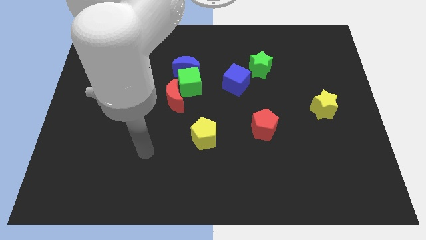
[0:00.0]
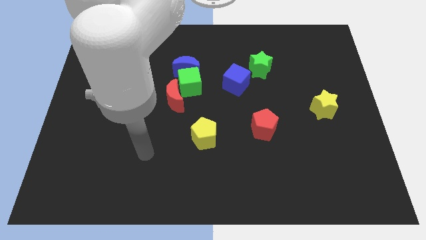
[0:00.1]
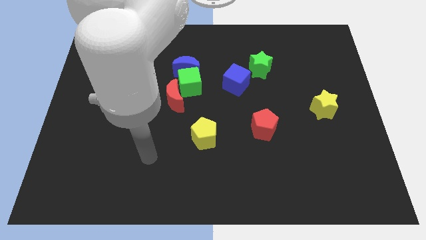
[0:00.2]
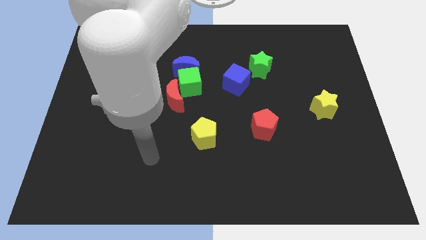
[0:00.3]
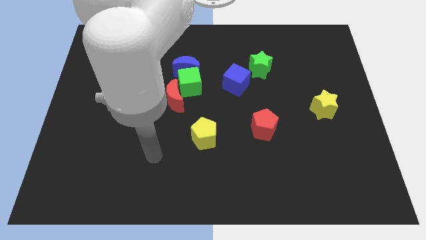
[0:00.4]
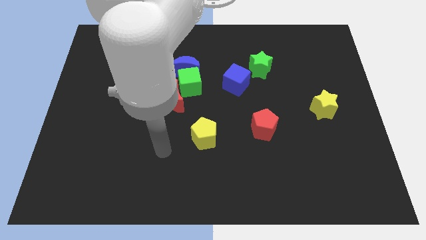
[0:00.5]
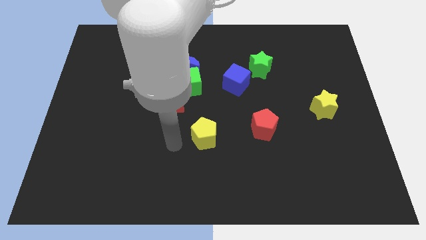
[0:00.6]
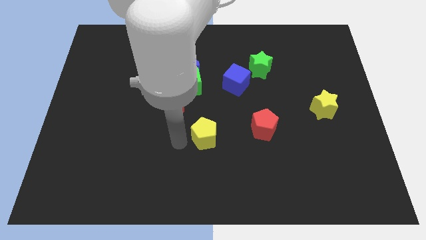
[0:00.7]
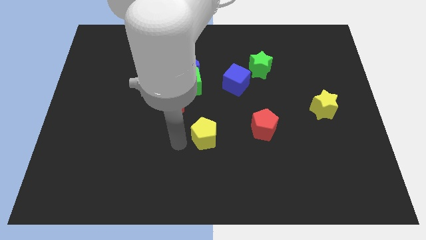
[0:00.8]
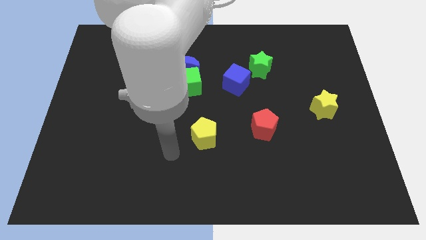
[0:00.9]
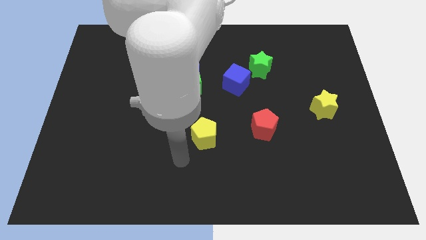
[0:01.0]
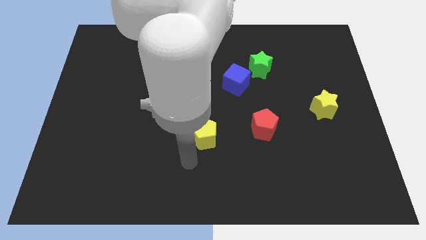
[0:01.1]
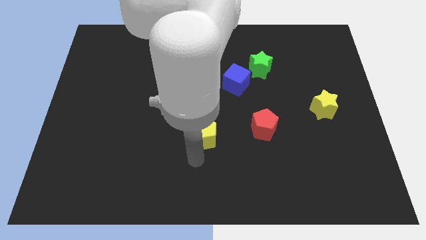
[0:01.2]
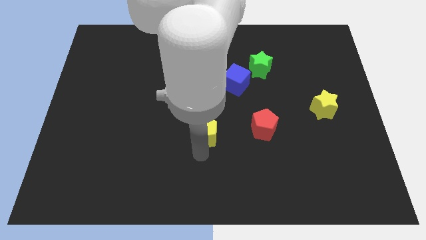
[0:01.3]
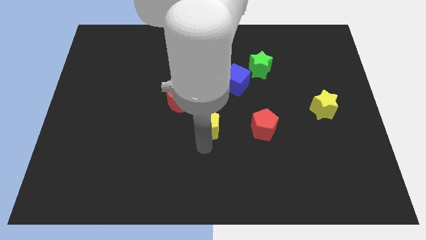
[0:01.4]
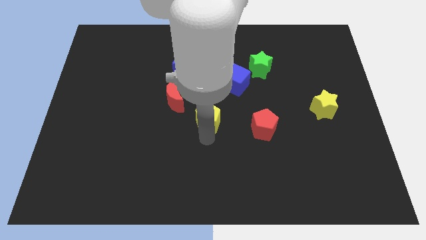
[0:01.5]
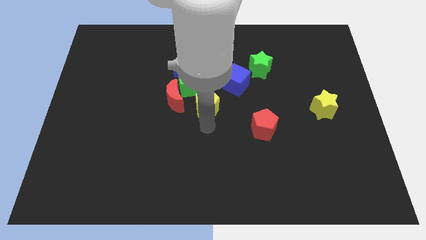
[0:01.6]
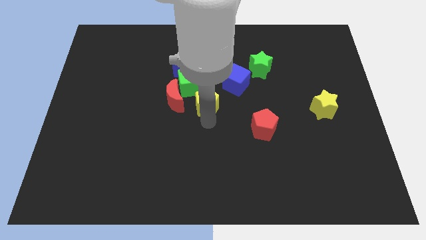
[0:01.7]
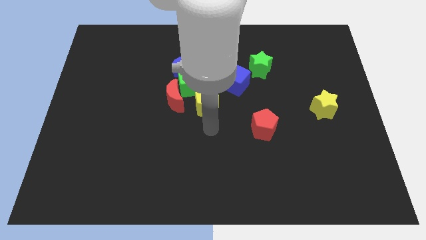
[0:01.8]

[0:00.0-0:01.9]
push the yellow pentagon into the green cube

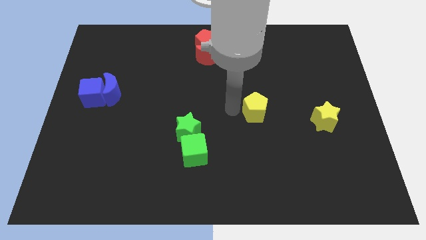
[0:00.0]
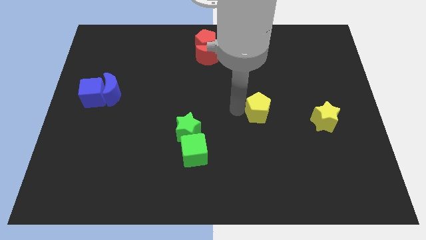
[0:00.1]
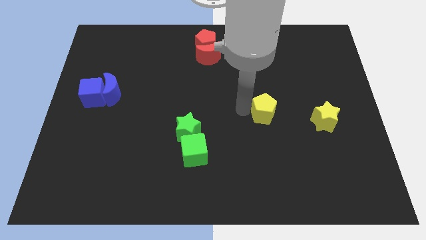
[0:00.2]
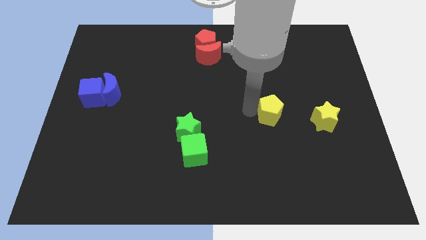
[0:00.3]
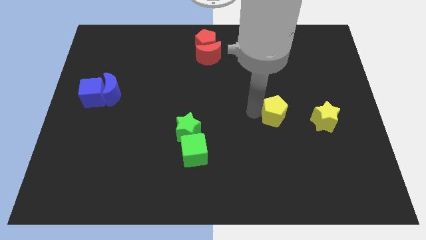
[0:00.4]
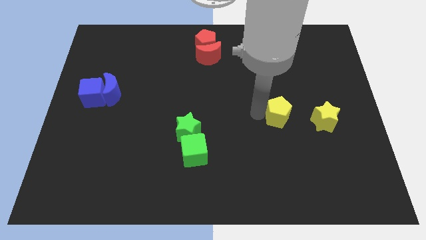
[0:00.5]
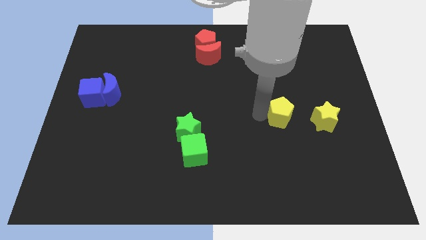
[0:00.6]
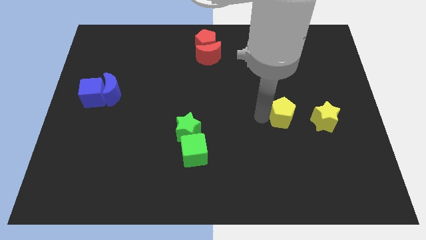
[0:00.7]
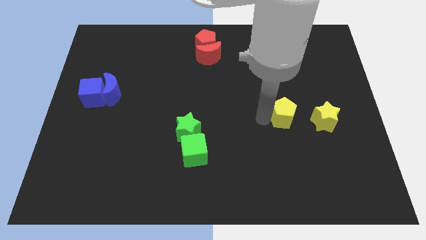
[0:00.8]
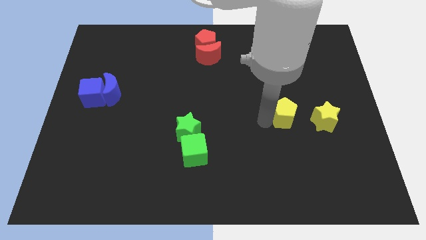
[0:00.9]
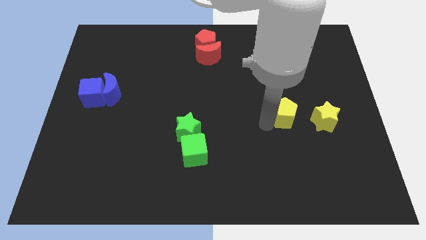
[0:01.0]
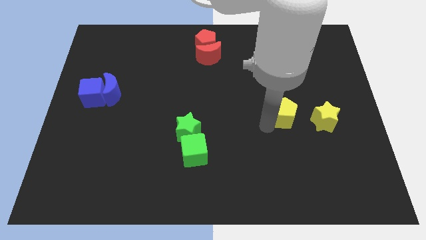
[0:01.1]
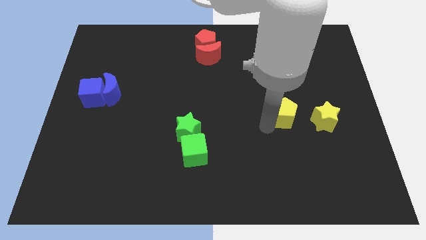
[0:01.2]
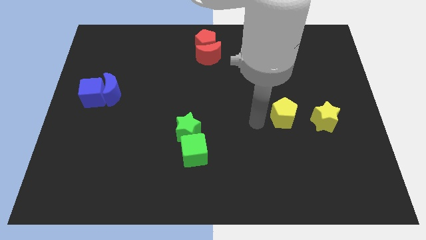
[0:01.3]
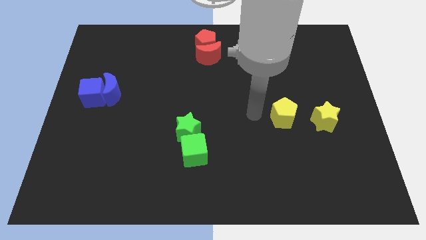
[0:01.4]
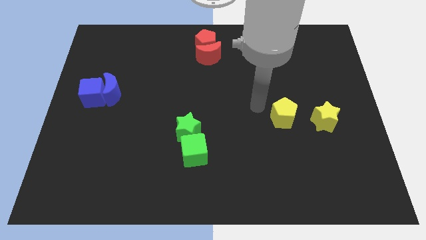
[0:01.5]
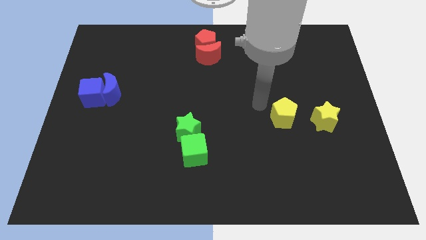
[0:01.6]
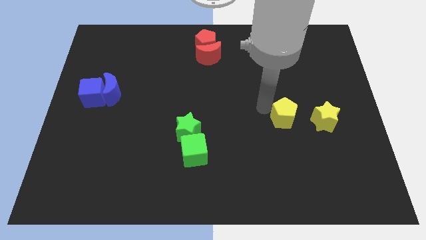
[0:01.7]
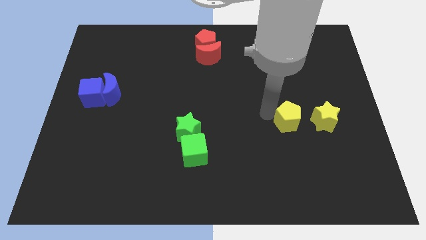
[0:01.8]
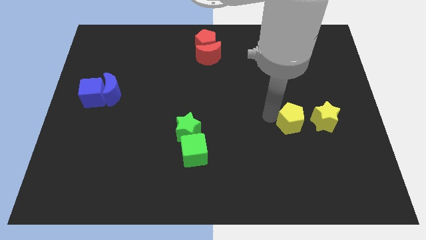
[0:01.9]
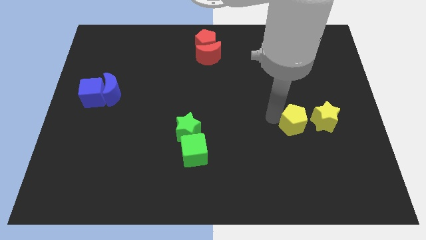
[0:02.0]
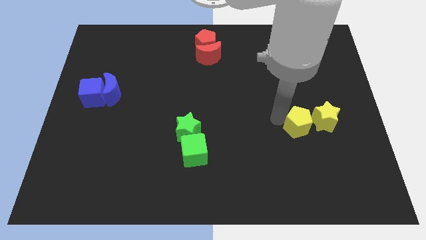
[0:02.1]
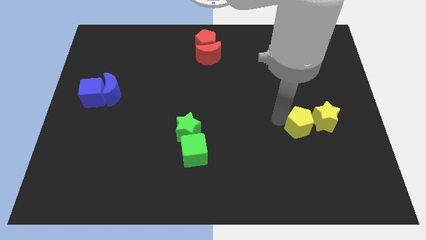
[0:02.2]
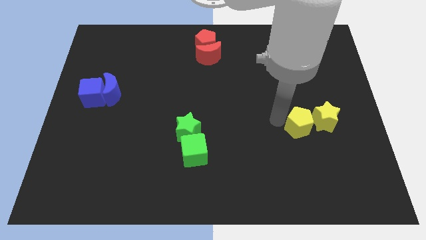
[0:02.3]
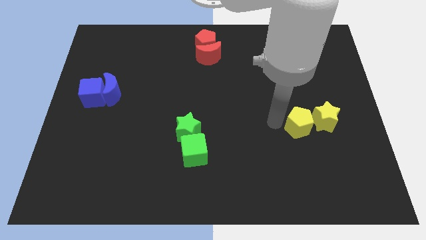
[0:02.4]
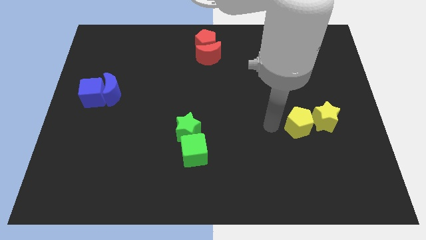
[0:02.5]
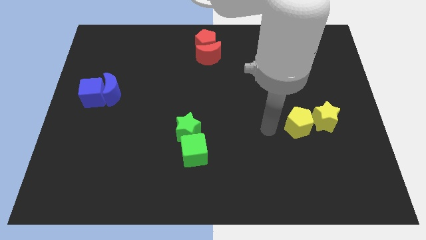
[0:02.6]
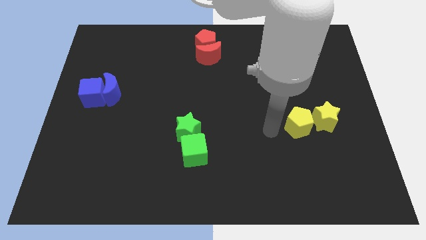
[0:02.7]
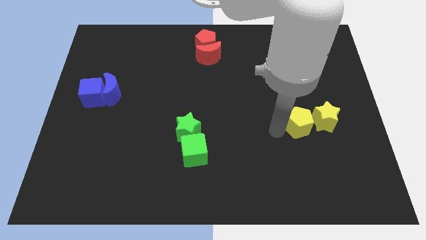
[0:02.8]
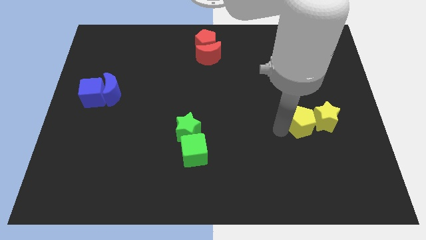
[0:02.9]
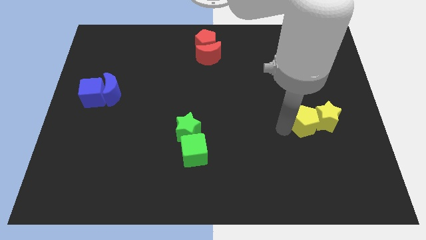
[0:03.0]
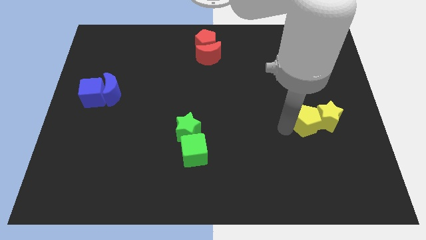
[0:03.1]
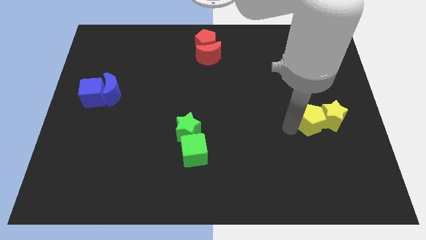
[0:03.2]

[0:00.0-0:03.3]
push the yellow pentagon into the yellow star

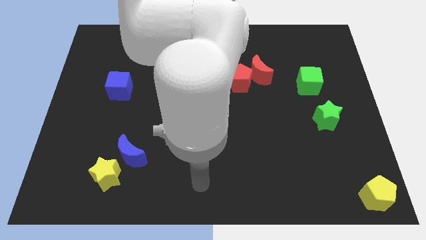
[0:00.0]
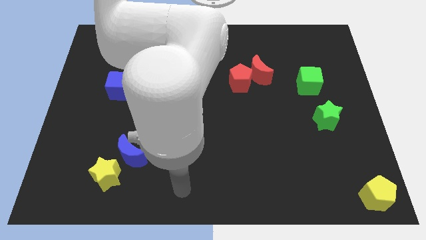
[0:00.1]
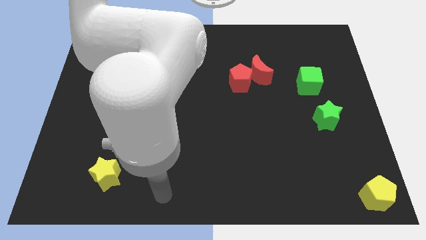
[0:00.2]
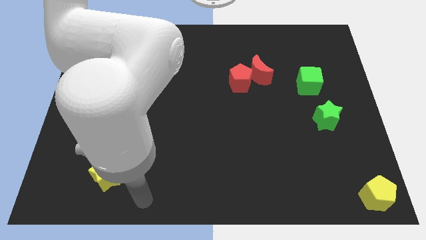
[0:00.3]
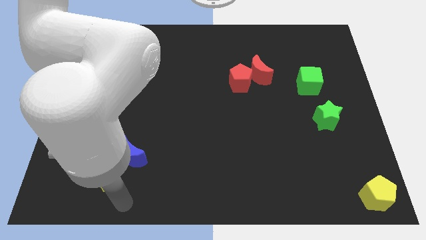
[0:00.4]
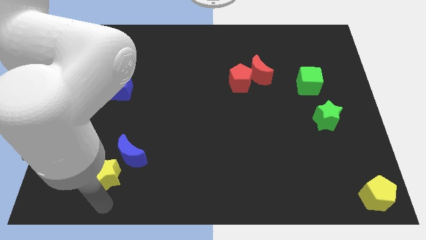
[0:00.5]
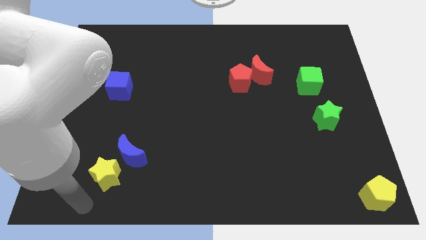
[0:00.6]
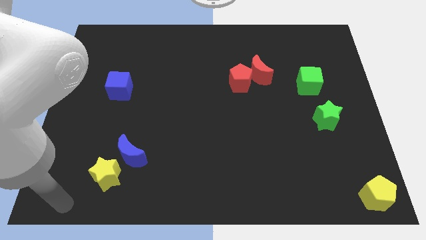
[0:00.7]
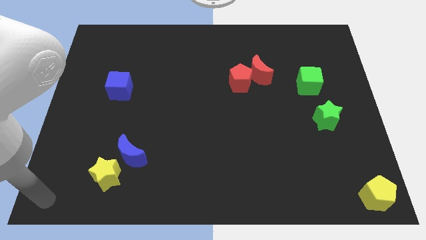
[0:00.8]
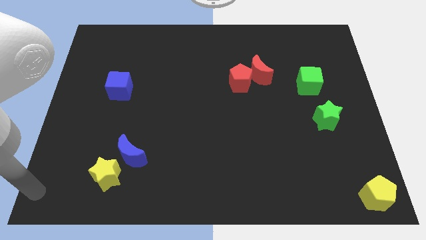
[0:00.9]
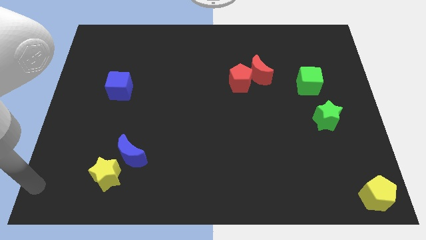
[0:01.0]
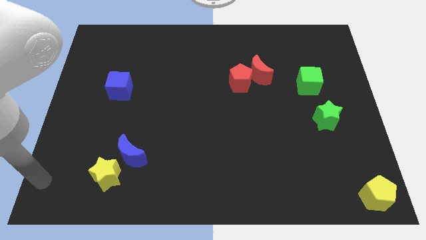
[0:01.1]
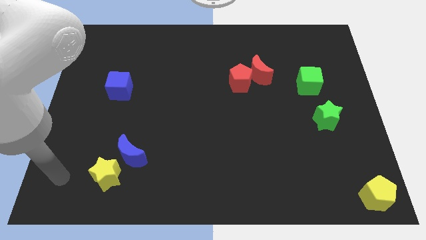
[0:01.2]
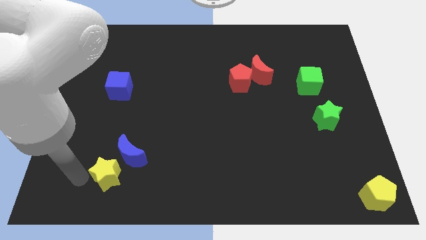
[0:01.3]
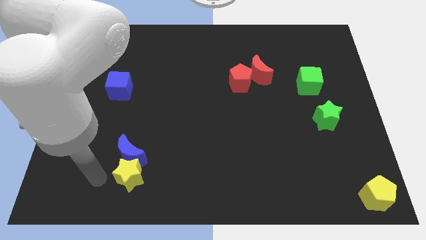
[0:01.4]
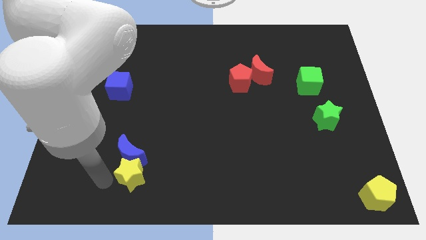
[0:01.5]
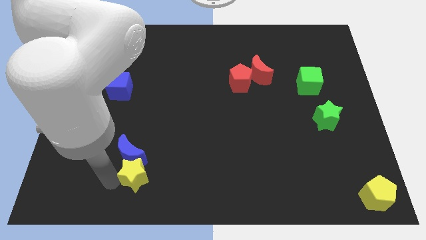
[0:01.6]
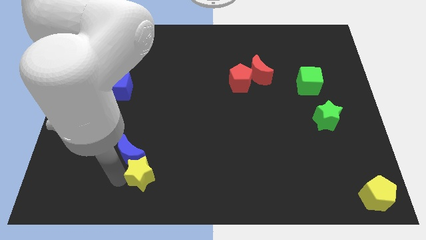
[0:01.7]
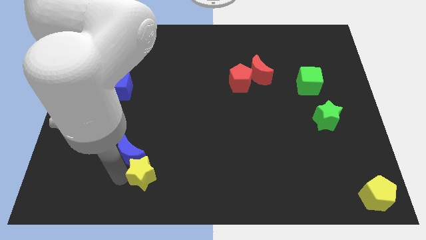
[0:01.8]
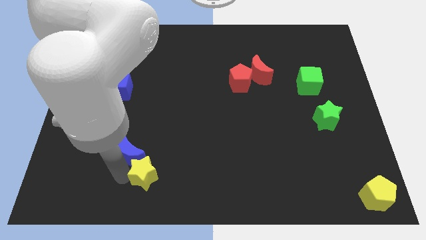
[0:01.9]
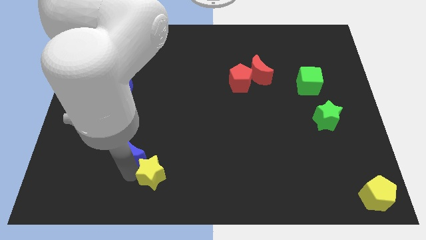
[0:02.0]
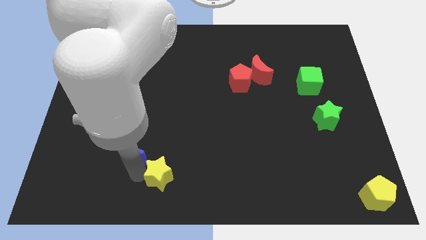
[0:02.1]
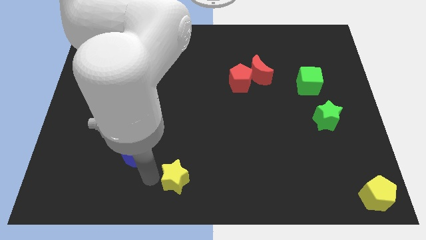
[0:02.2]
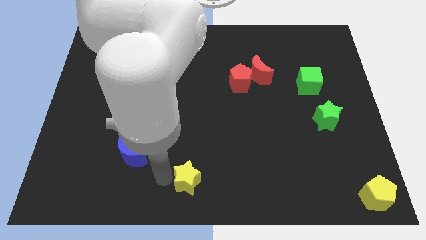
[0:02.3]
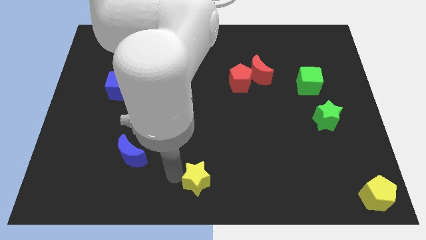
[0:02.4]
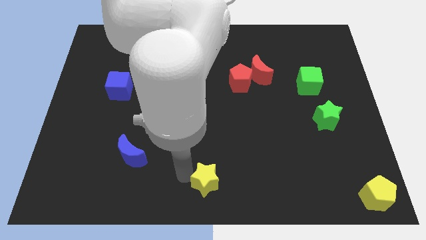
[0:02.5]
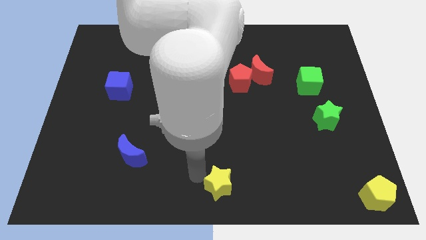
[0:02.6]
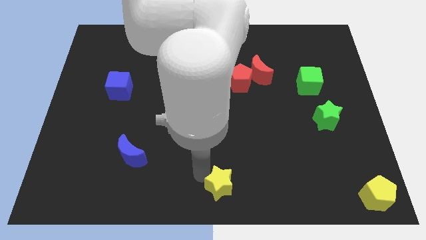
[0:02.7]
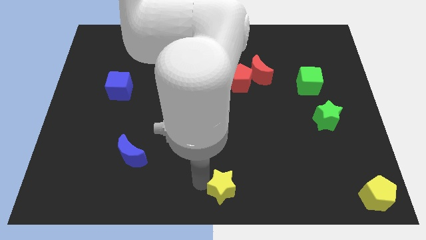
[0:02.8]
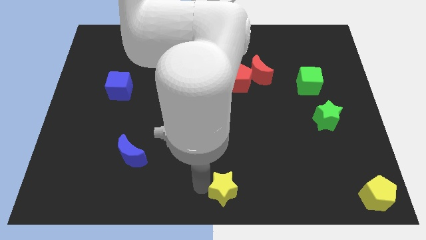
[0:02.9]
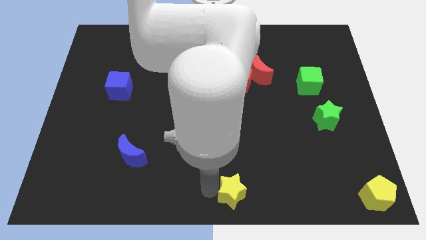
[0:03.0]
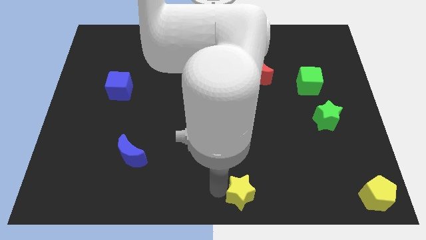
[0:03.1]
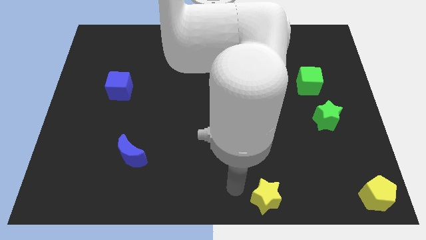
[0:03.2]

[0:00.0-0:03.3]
move the yellow star towards the bottom centre of the board

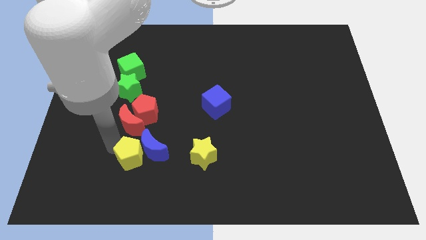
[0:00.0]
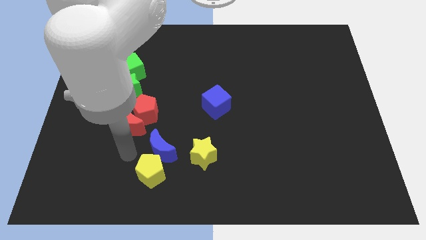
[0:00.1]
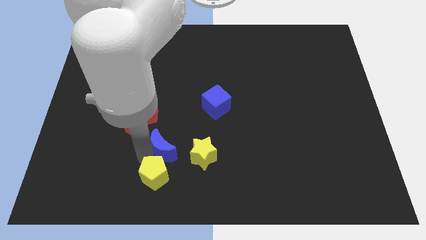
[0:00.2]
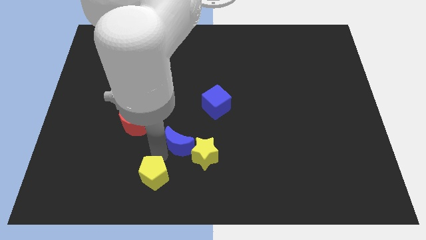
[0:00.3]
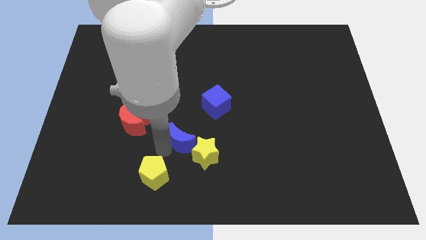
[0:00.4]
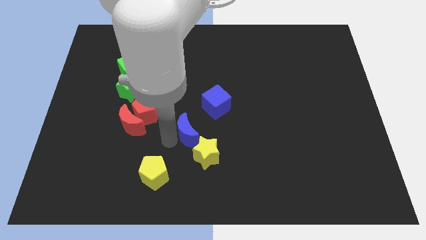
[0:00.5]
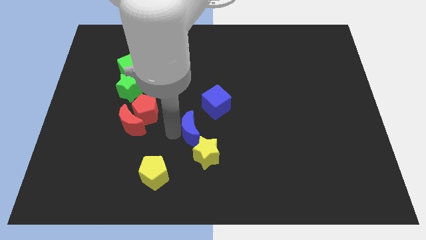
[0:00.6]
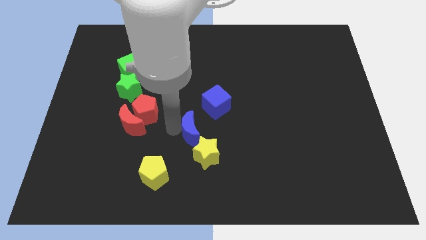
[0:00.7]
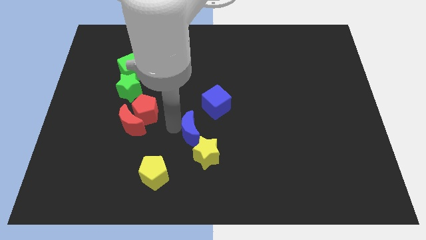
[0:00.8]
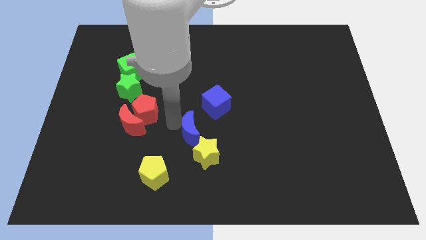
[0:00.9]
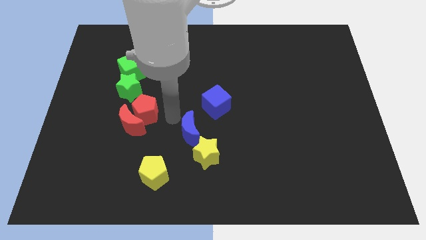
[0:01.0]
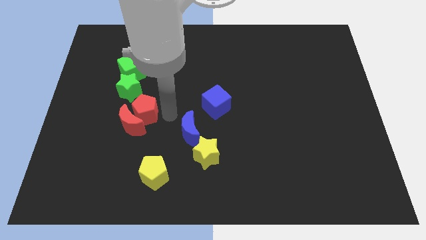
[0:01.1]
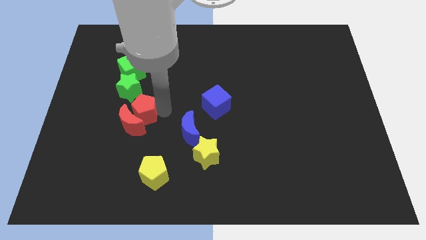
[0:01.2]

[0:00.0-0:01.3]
drag the blue moon to the right
